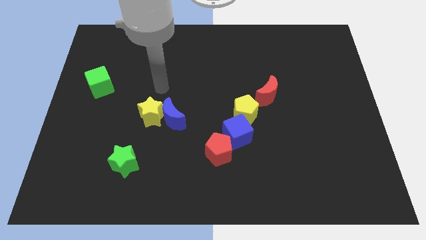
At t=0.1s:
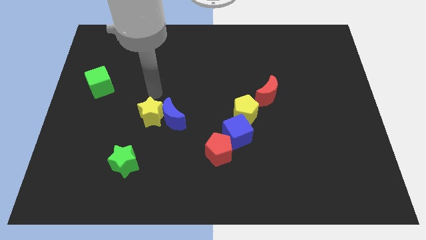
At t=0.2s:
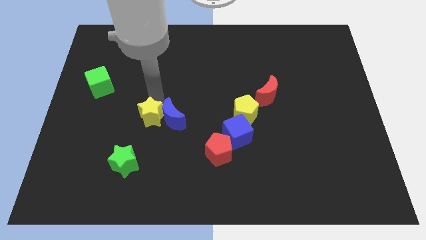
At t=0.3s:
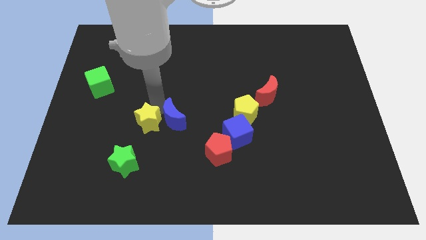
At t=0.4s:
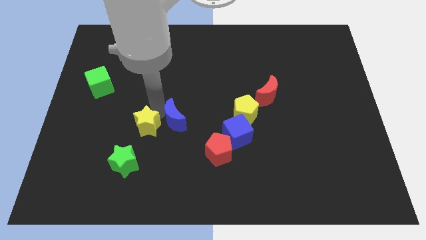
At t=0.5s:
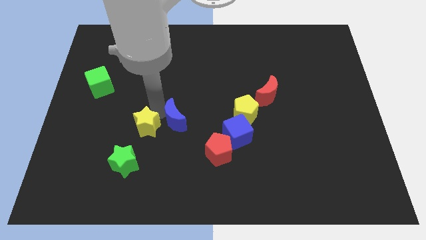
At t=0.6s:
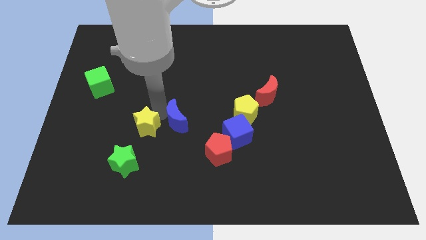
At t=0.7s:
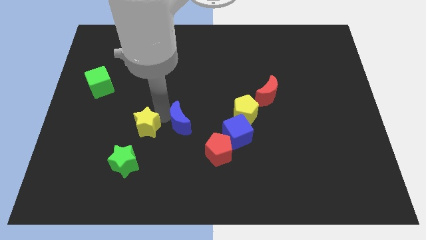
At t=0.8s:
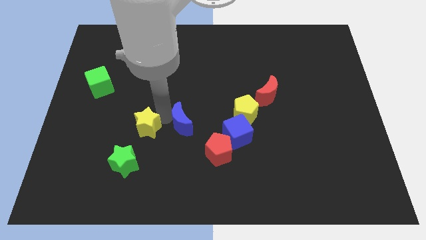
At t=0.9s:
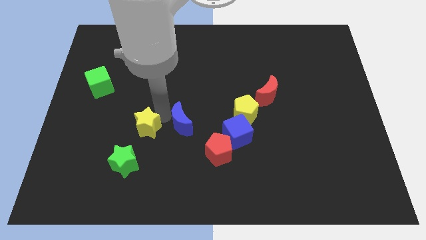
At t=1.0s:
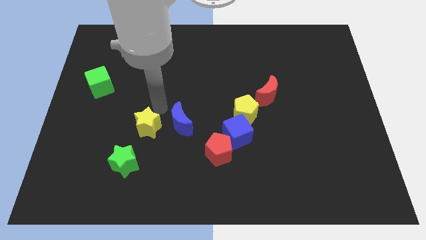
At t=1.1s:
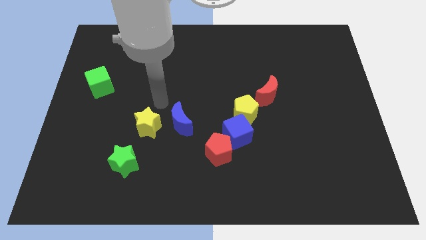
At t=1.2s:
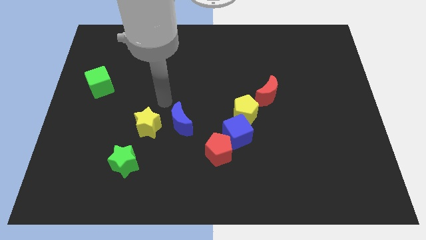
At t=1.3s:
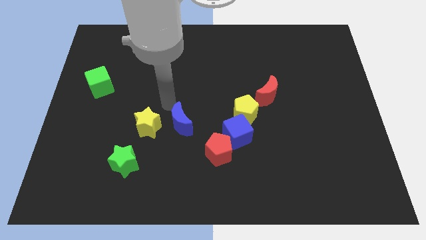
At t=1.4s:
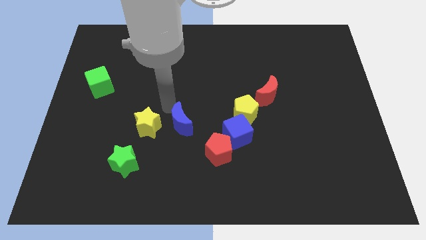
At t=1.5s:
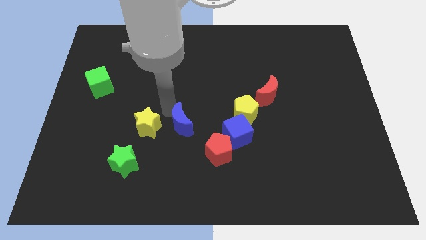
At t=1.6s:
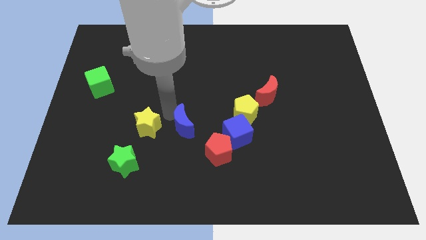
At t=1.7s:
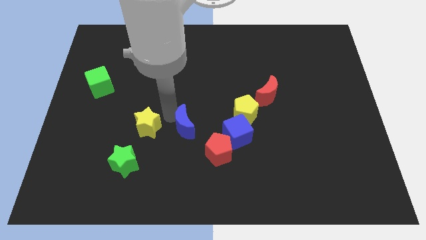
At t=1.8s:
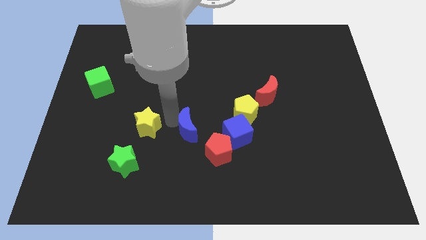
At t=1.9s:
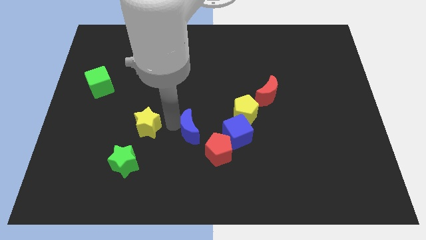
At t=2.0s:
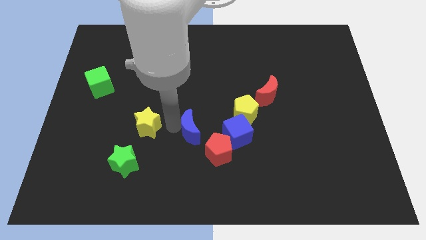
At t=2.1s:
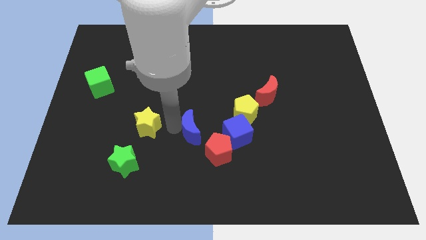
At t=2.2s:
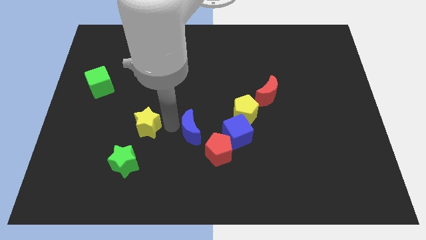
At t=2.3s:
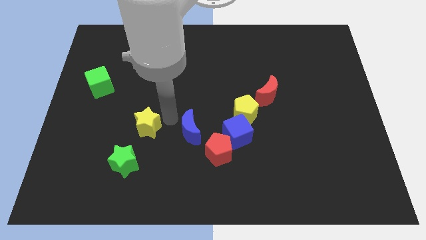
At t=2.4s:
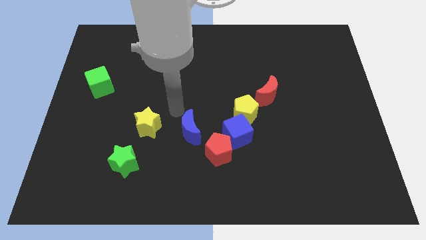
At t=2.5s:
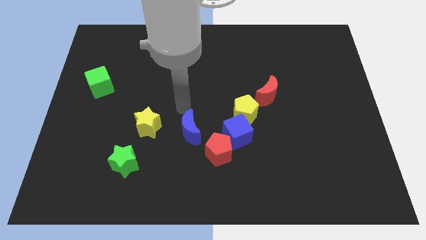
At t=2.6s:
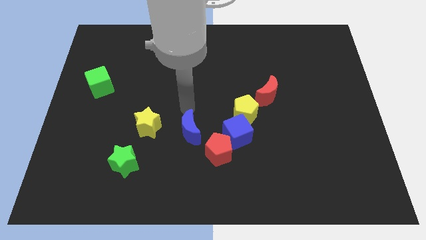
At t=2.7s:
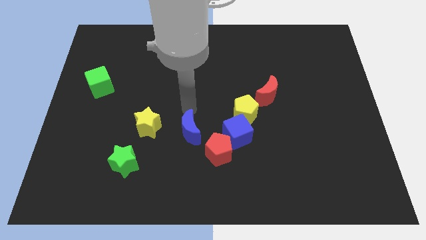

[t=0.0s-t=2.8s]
seperate the yellow star and the blue moon

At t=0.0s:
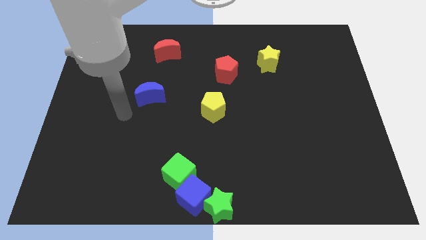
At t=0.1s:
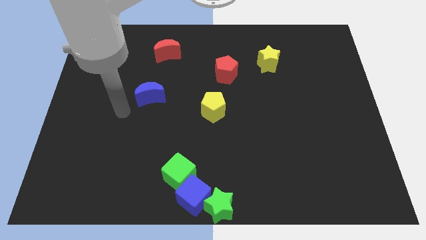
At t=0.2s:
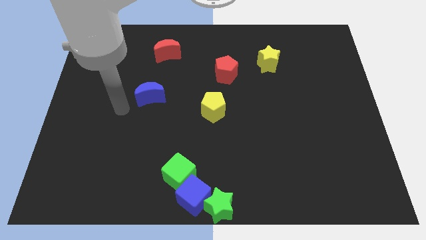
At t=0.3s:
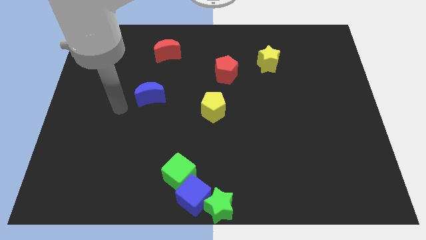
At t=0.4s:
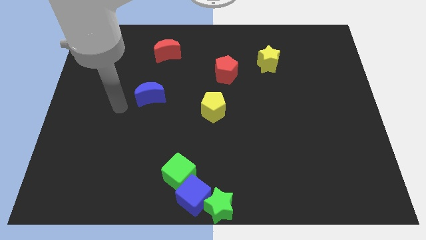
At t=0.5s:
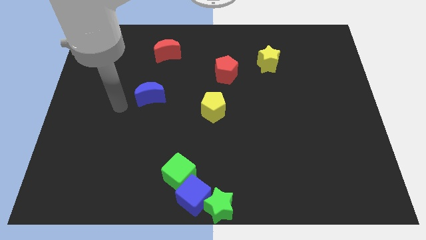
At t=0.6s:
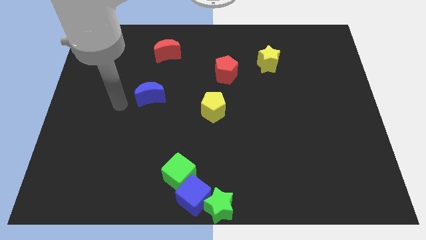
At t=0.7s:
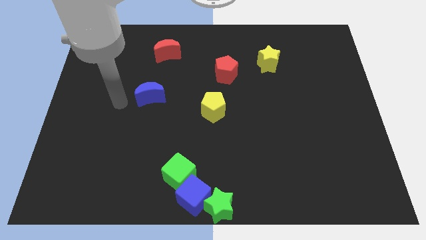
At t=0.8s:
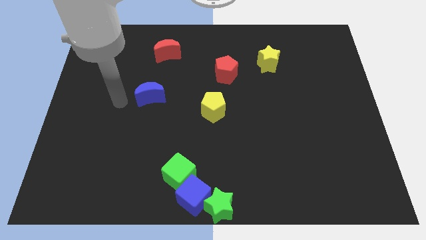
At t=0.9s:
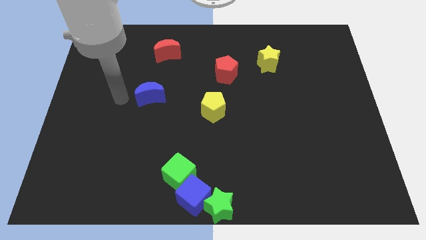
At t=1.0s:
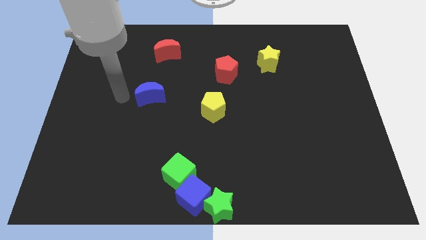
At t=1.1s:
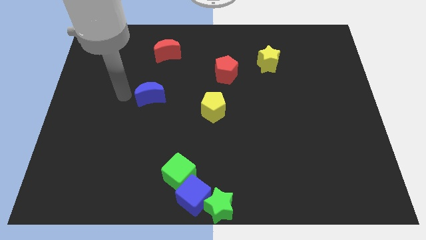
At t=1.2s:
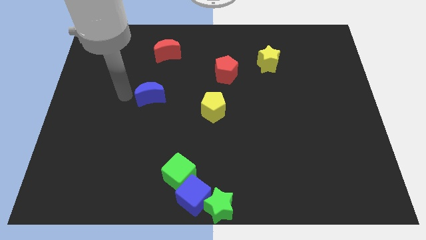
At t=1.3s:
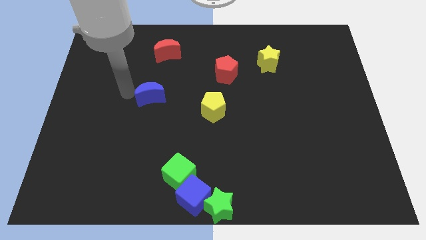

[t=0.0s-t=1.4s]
put arm on the left side of blue moon

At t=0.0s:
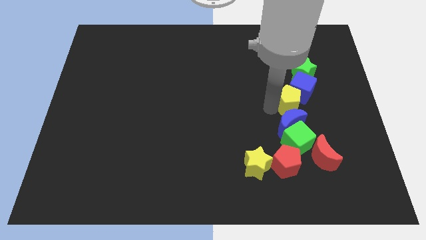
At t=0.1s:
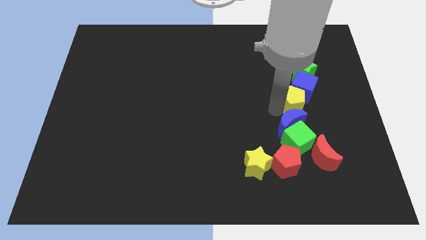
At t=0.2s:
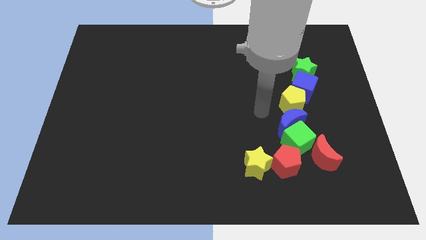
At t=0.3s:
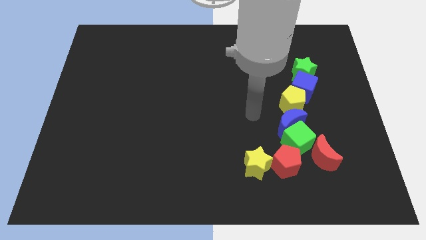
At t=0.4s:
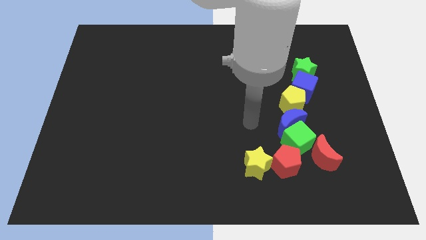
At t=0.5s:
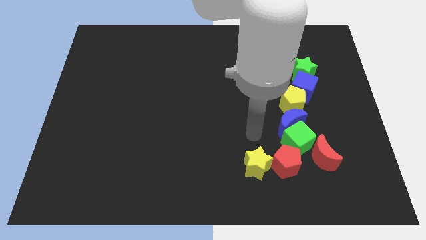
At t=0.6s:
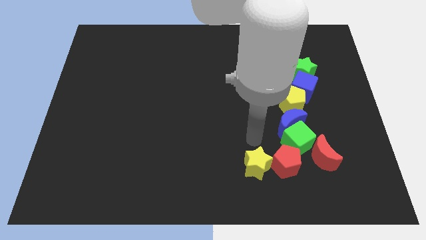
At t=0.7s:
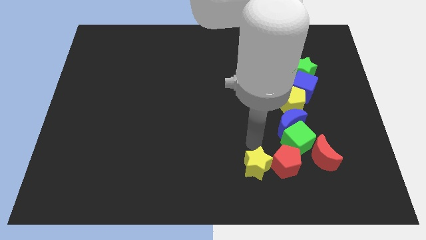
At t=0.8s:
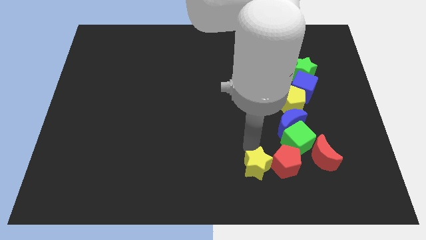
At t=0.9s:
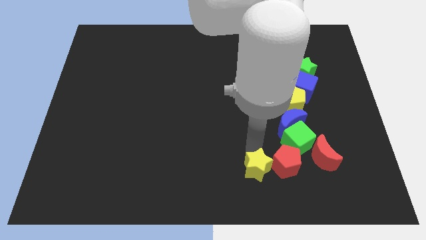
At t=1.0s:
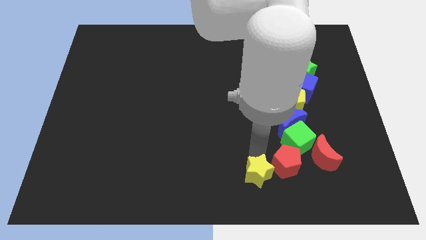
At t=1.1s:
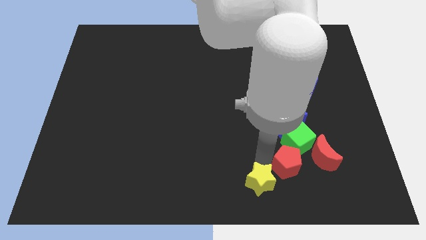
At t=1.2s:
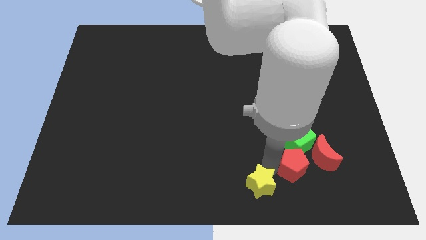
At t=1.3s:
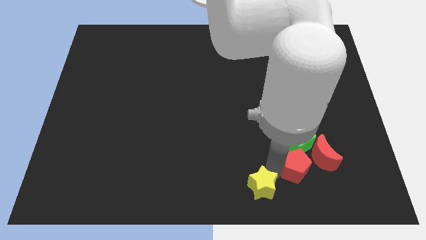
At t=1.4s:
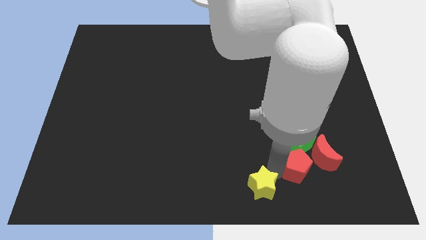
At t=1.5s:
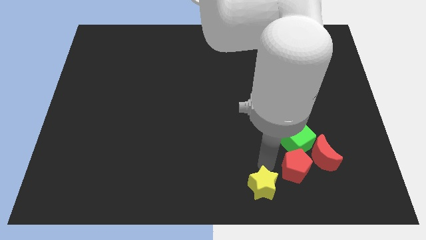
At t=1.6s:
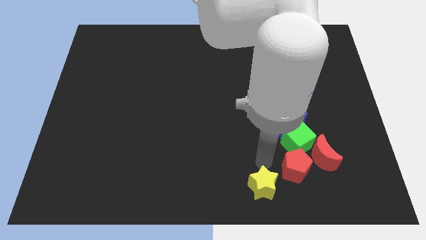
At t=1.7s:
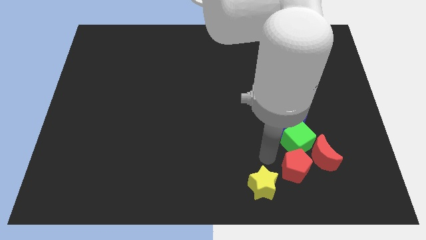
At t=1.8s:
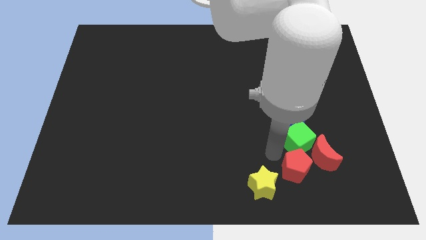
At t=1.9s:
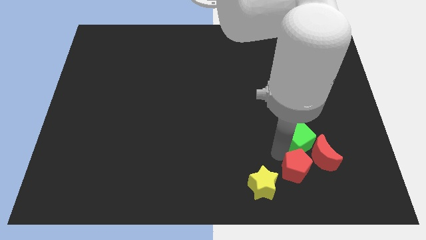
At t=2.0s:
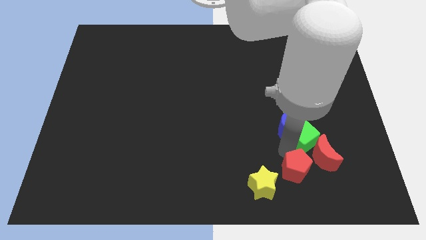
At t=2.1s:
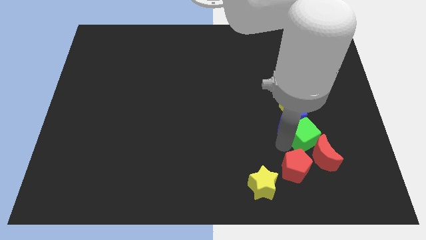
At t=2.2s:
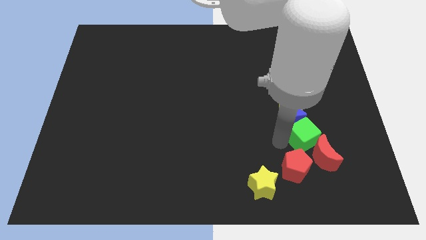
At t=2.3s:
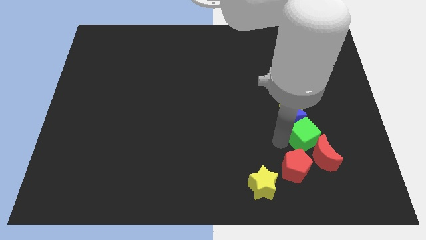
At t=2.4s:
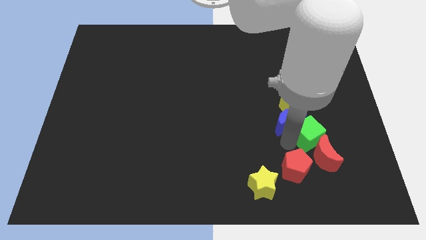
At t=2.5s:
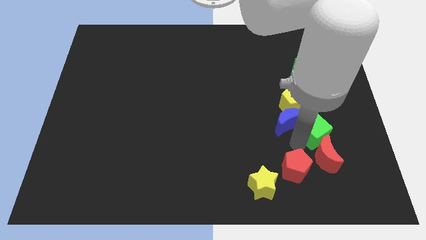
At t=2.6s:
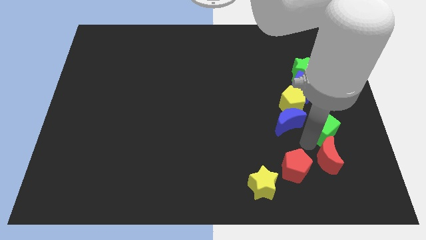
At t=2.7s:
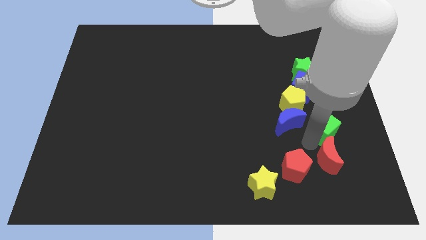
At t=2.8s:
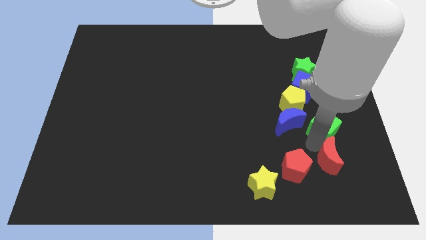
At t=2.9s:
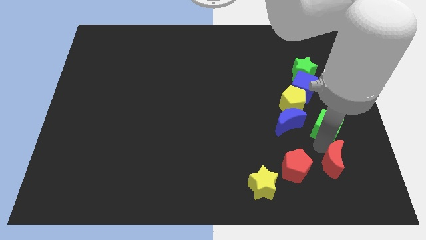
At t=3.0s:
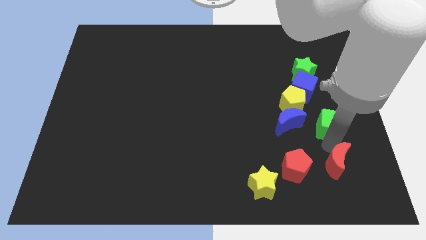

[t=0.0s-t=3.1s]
separate the yellow star red pentagon green cube and red moon from each other

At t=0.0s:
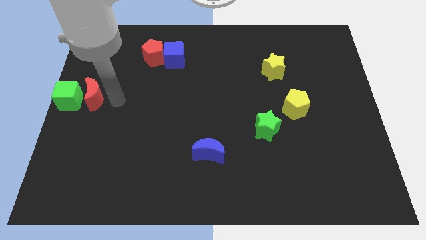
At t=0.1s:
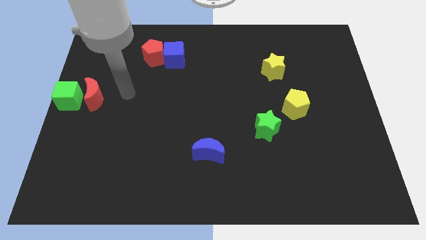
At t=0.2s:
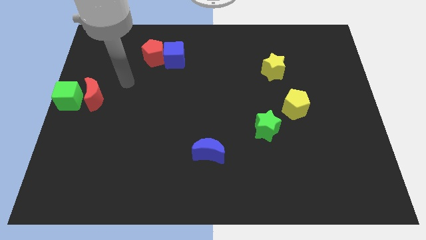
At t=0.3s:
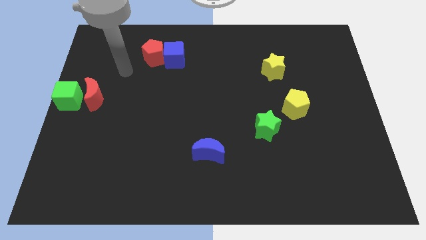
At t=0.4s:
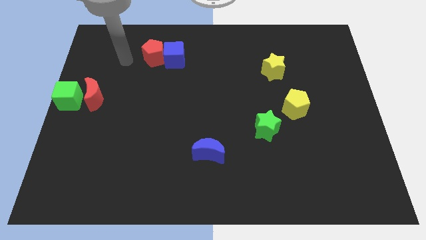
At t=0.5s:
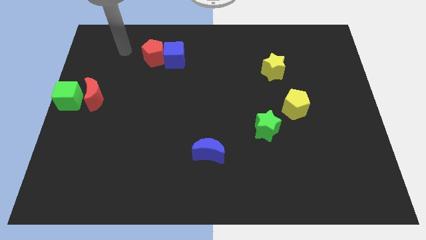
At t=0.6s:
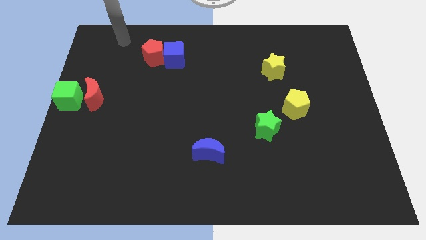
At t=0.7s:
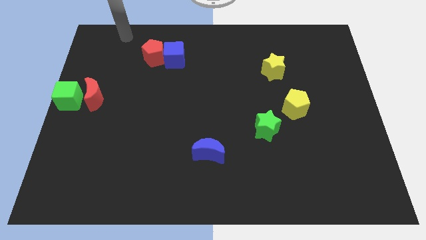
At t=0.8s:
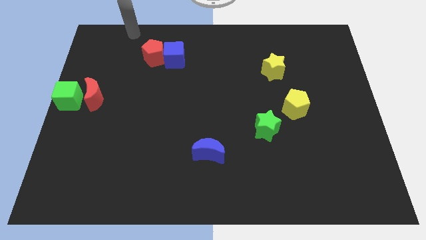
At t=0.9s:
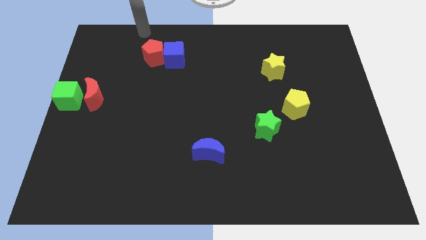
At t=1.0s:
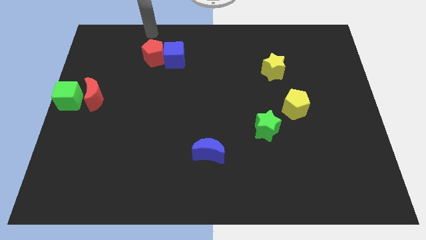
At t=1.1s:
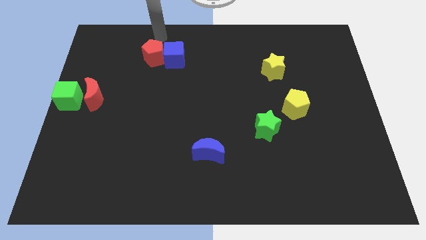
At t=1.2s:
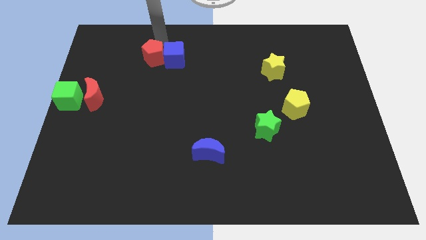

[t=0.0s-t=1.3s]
move your arm away from red moon

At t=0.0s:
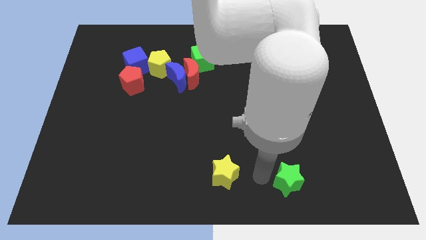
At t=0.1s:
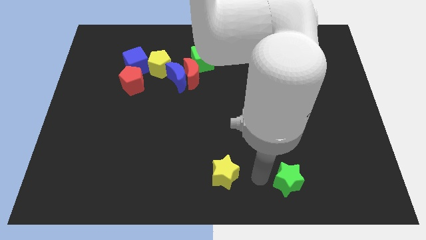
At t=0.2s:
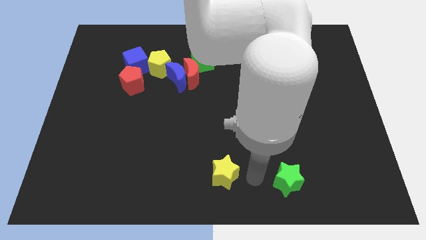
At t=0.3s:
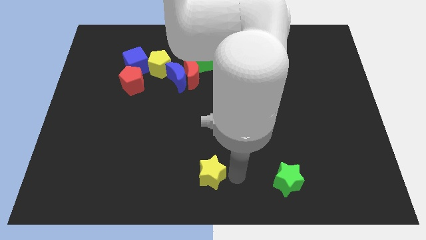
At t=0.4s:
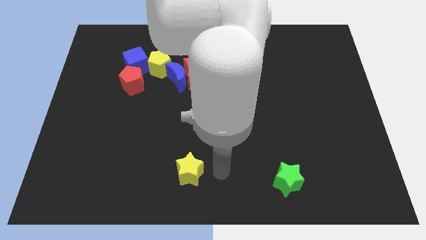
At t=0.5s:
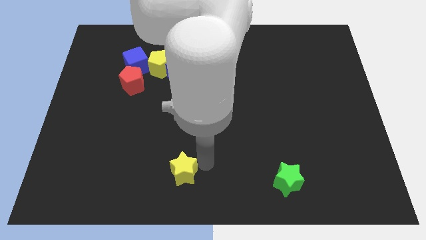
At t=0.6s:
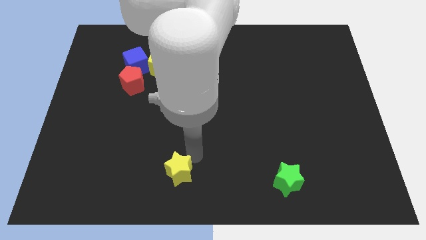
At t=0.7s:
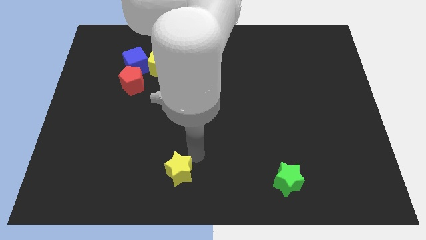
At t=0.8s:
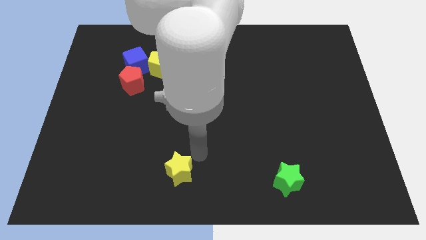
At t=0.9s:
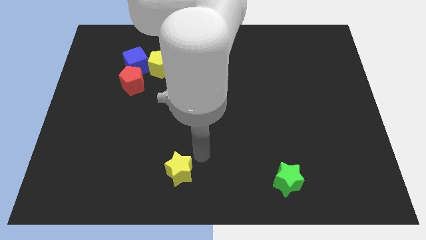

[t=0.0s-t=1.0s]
move the yellow star to the left of the board
